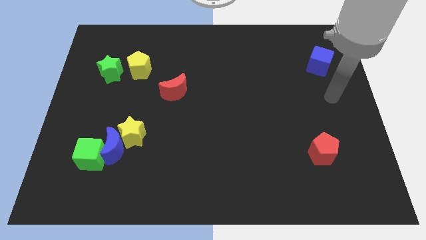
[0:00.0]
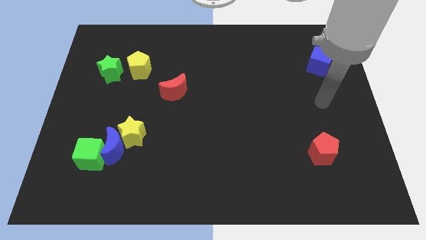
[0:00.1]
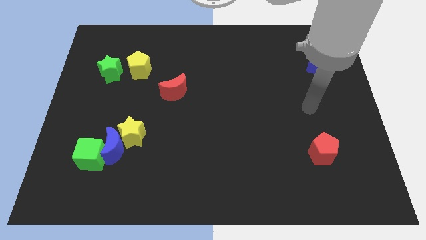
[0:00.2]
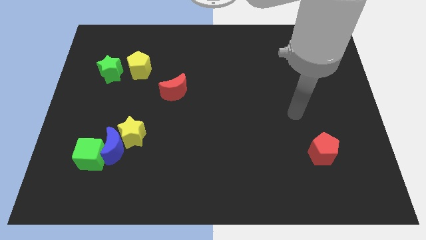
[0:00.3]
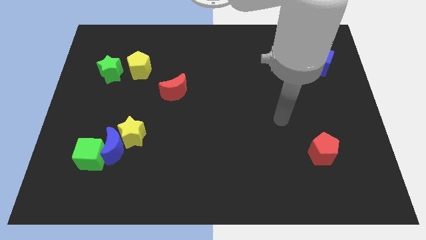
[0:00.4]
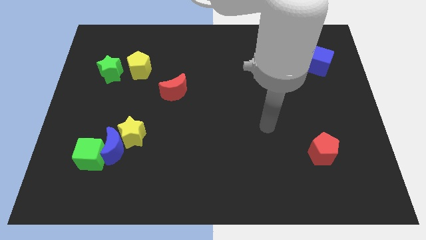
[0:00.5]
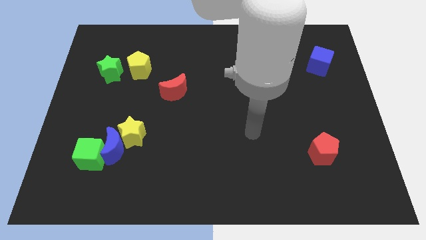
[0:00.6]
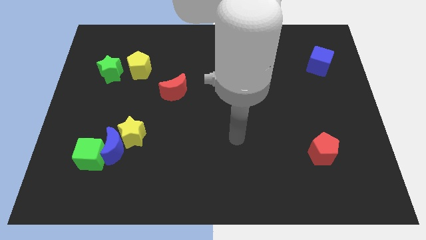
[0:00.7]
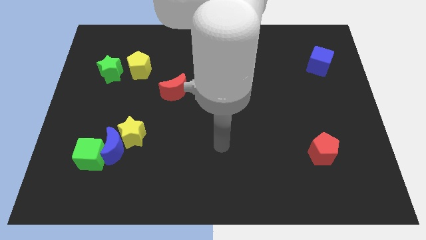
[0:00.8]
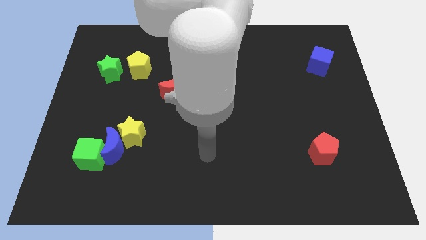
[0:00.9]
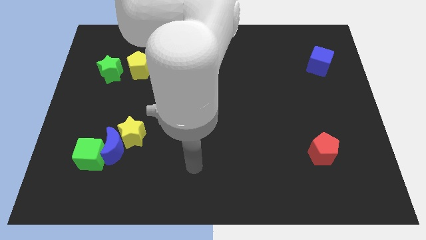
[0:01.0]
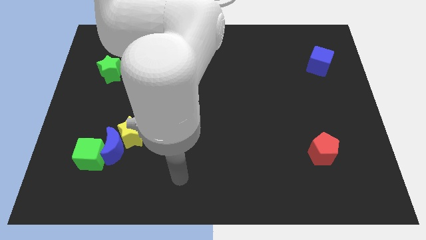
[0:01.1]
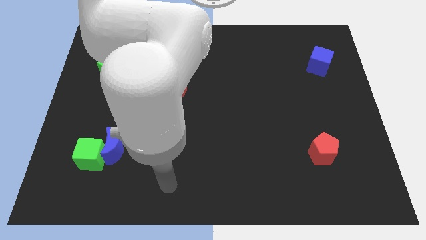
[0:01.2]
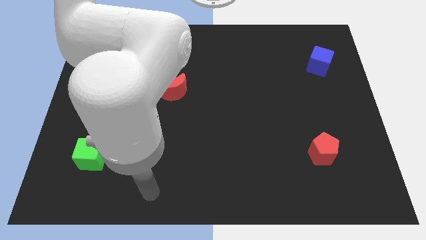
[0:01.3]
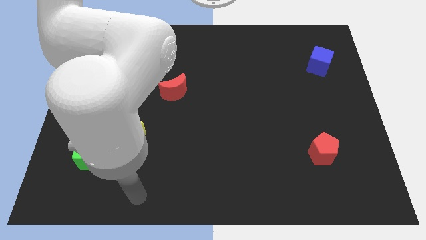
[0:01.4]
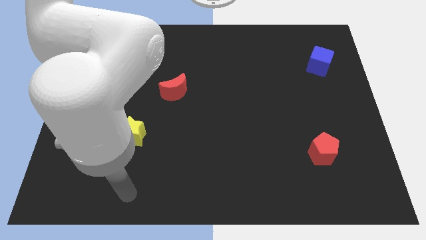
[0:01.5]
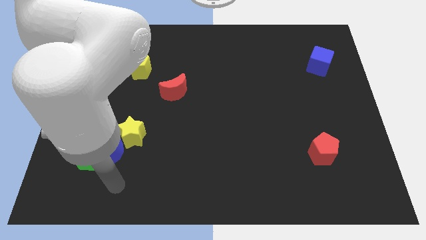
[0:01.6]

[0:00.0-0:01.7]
place your hand below the blue crescent

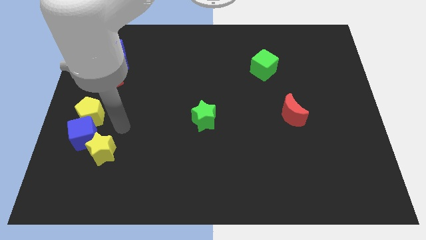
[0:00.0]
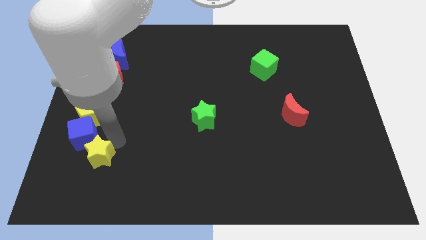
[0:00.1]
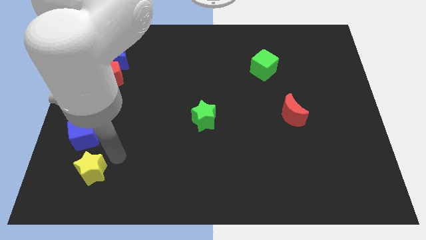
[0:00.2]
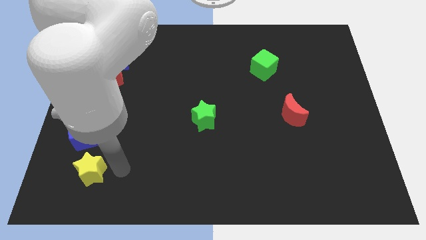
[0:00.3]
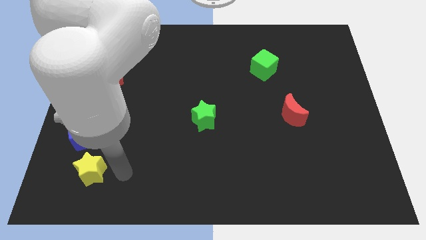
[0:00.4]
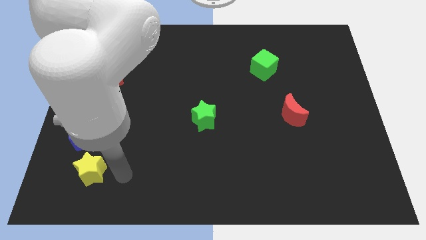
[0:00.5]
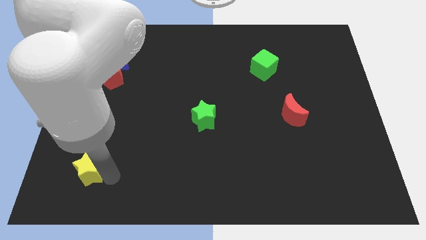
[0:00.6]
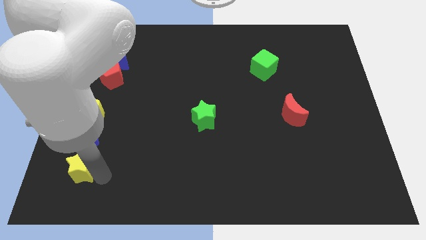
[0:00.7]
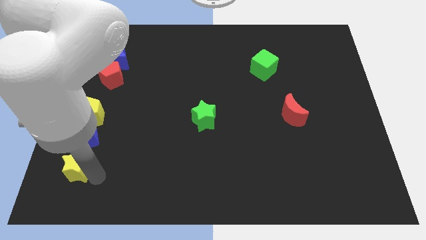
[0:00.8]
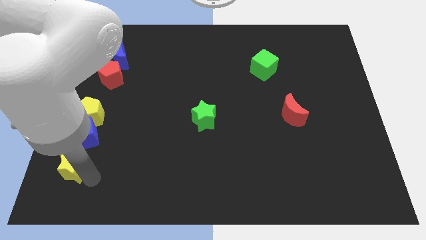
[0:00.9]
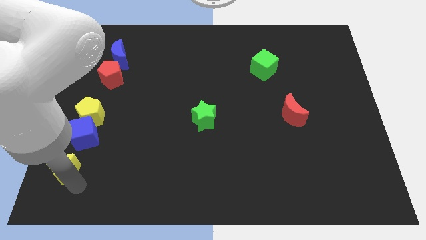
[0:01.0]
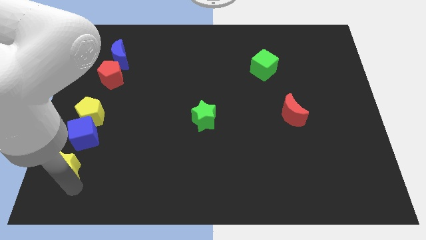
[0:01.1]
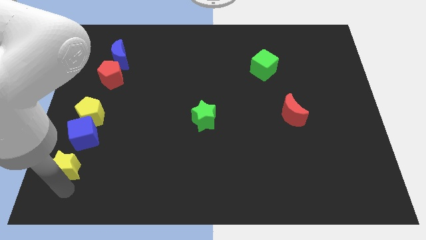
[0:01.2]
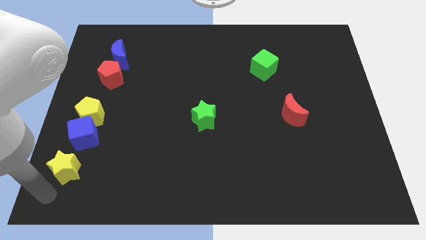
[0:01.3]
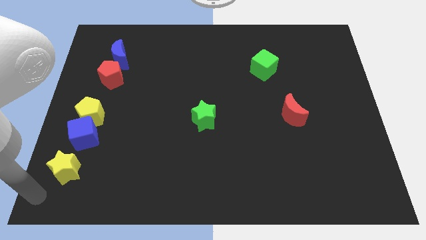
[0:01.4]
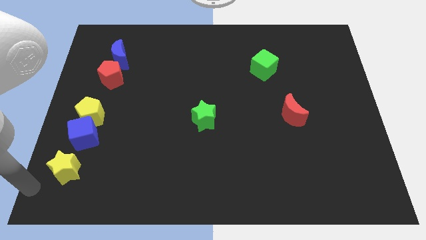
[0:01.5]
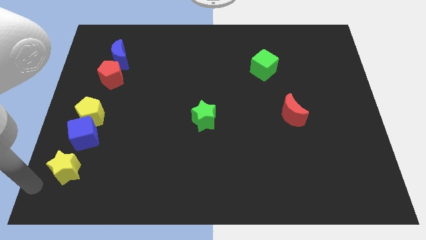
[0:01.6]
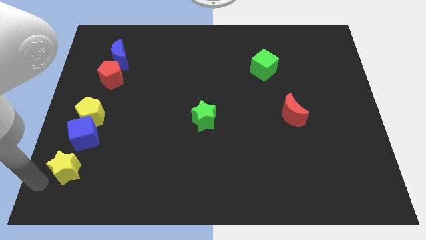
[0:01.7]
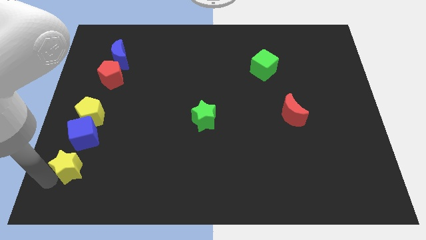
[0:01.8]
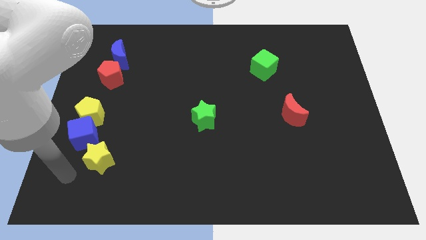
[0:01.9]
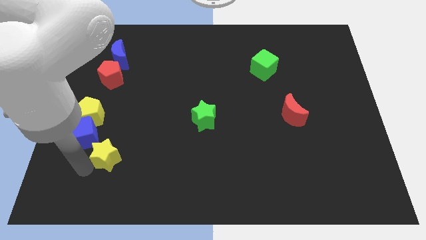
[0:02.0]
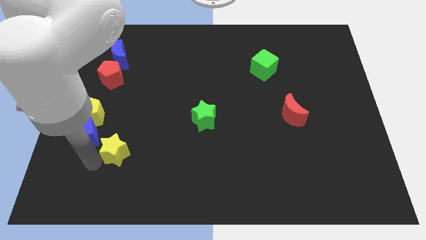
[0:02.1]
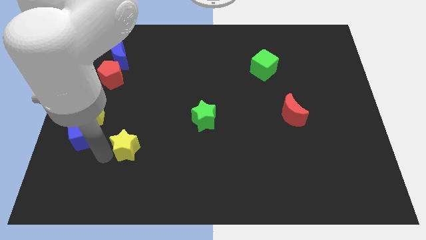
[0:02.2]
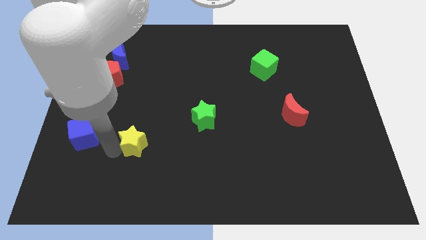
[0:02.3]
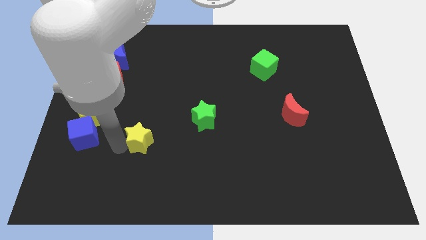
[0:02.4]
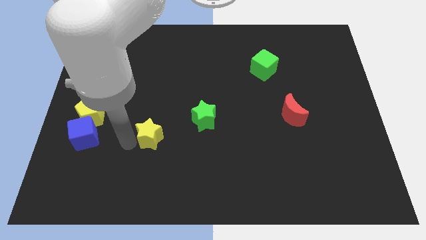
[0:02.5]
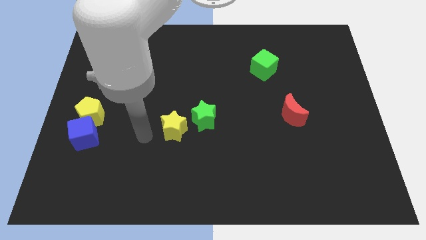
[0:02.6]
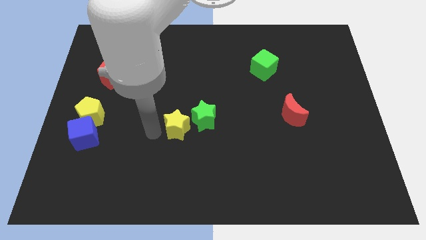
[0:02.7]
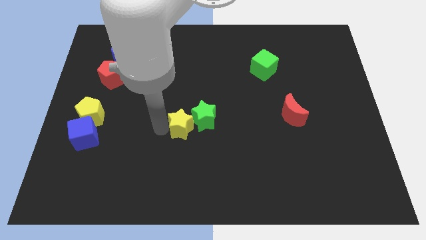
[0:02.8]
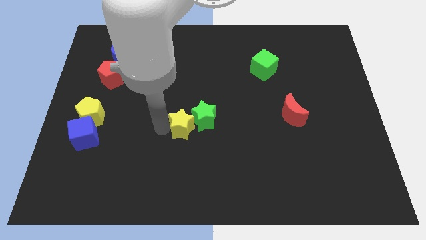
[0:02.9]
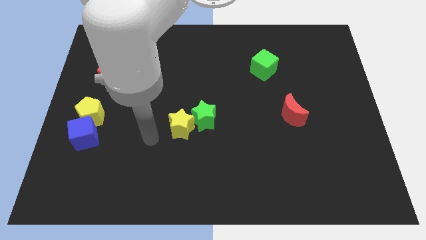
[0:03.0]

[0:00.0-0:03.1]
push yellow star beside green star

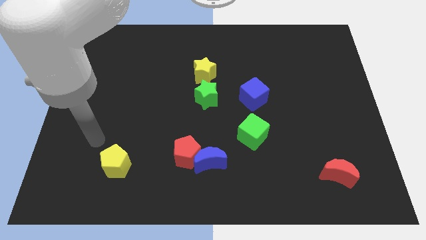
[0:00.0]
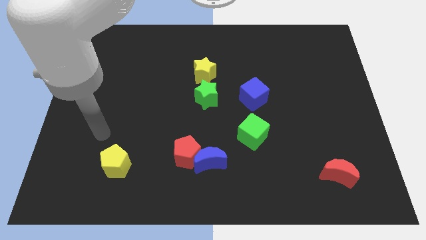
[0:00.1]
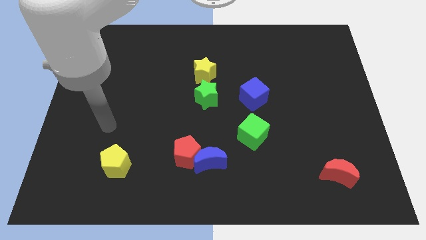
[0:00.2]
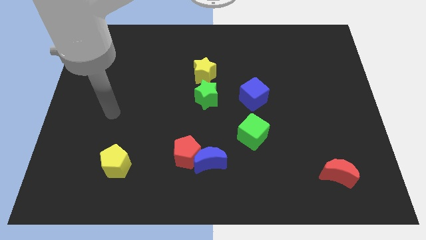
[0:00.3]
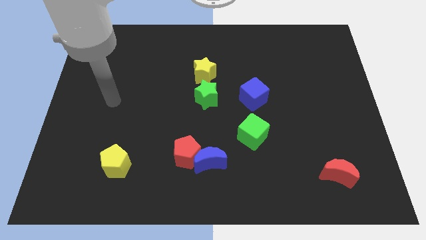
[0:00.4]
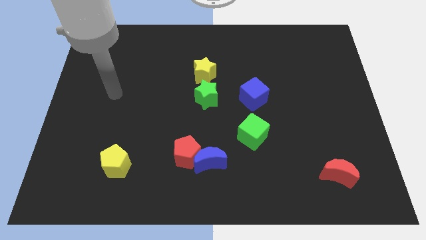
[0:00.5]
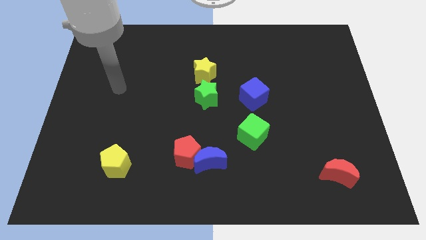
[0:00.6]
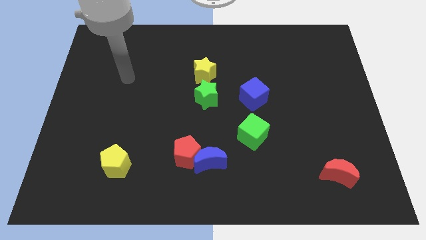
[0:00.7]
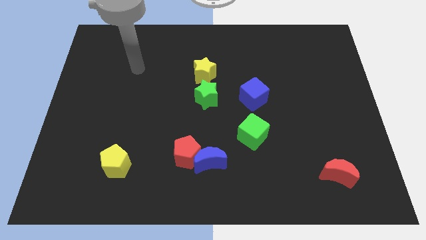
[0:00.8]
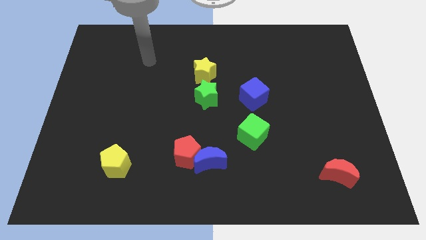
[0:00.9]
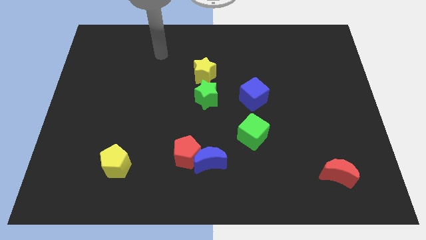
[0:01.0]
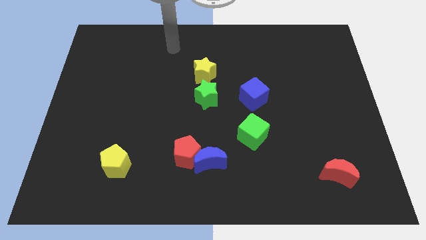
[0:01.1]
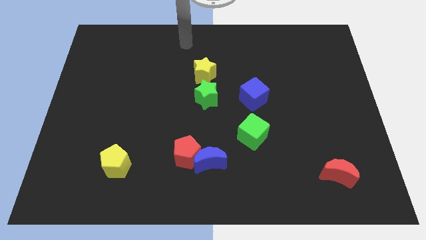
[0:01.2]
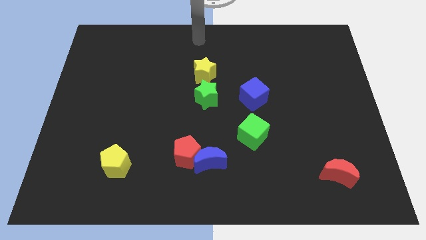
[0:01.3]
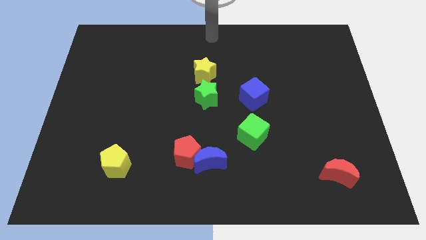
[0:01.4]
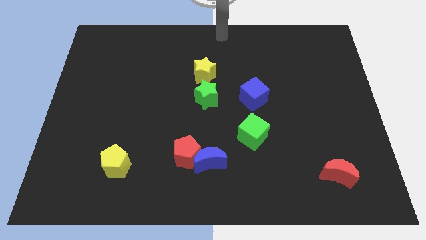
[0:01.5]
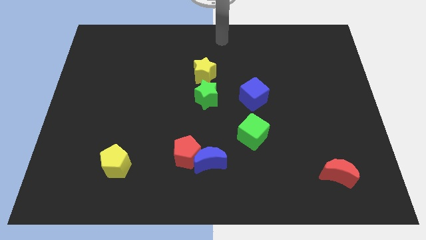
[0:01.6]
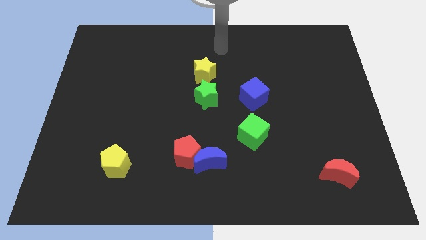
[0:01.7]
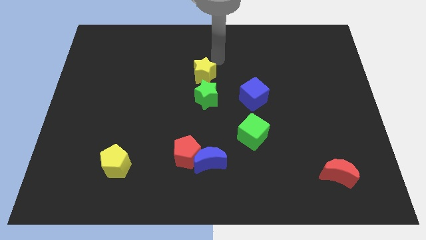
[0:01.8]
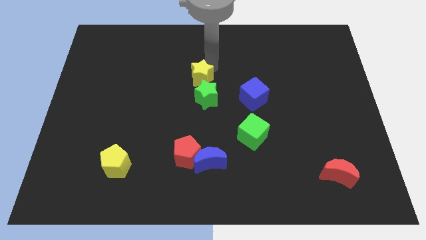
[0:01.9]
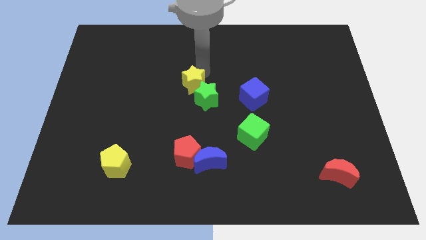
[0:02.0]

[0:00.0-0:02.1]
move your arm towards the top of the yellow star

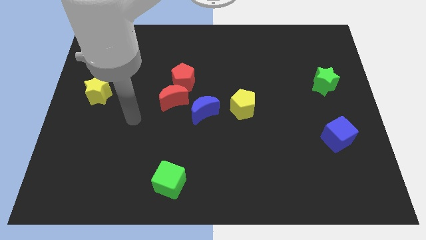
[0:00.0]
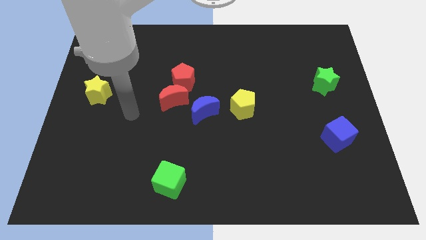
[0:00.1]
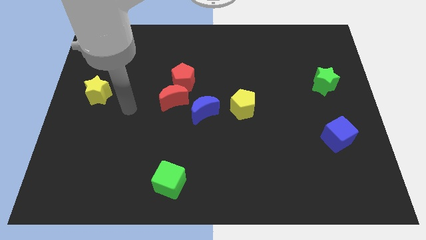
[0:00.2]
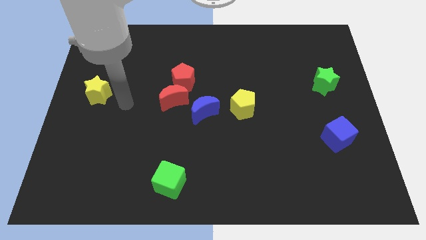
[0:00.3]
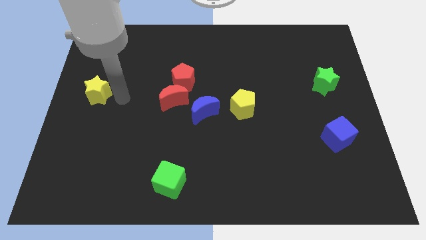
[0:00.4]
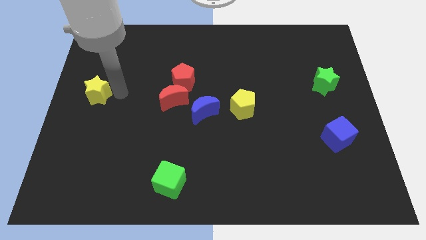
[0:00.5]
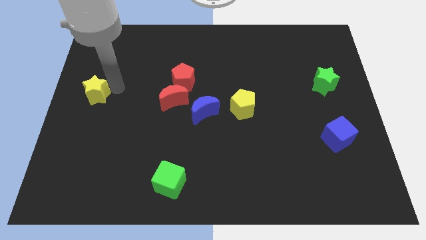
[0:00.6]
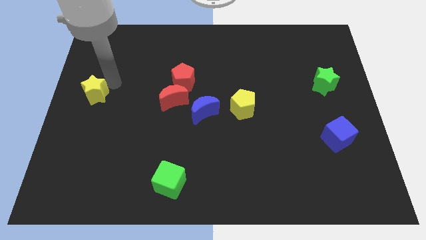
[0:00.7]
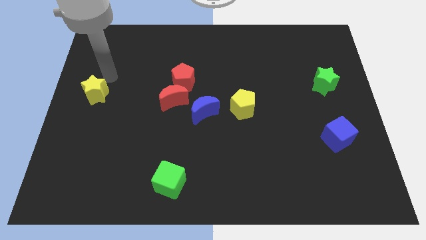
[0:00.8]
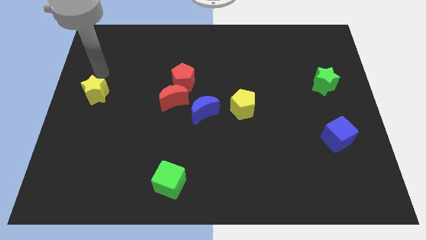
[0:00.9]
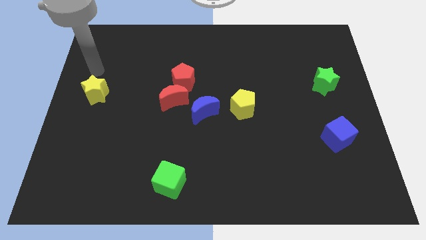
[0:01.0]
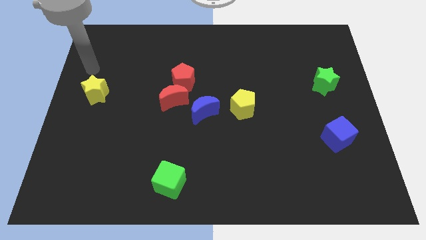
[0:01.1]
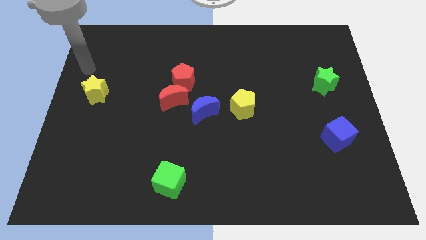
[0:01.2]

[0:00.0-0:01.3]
move your arm to the top of the yellow star

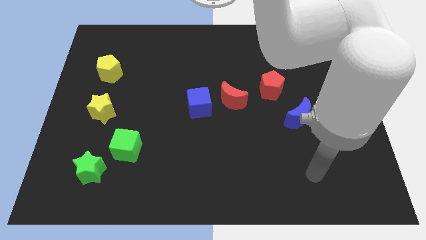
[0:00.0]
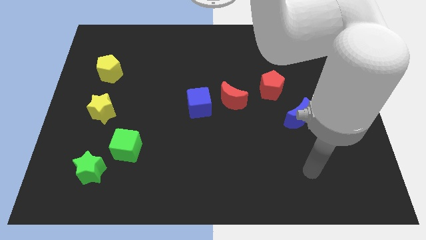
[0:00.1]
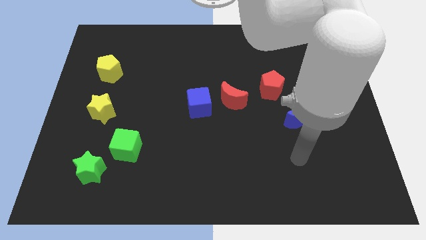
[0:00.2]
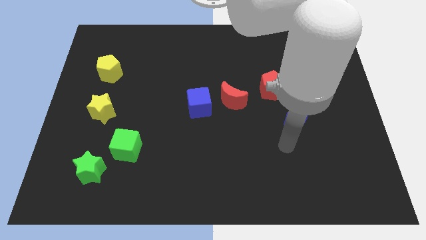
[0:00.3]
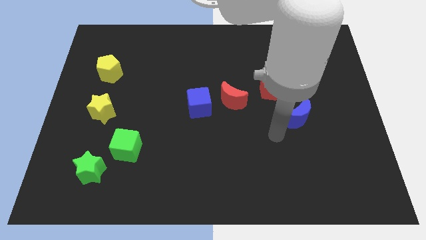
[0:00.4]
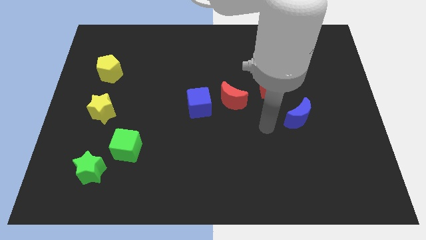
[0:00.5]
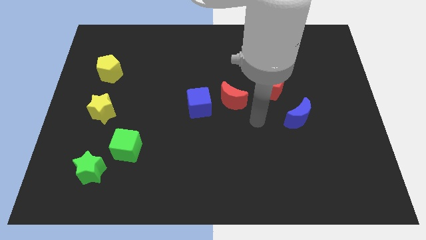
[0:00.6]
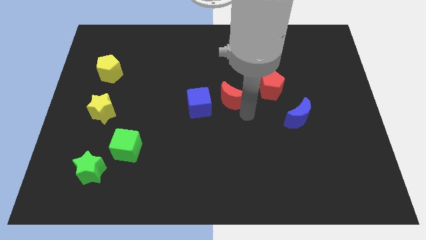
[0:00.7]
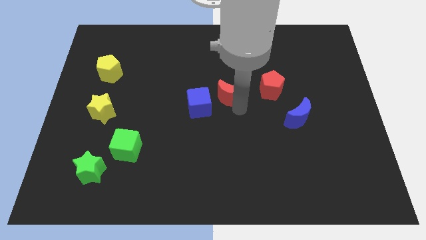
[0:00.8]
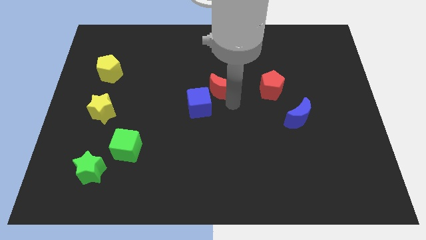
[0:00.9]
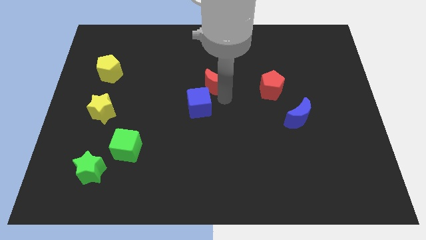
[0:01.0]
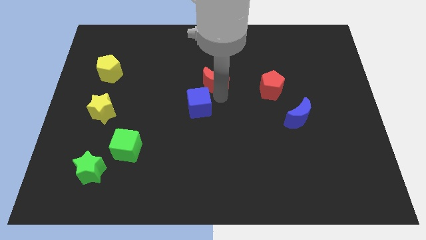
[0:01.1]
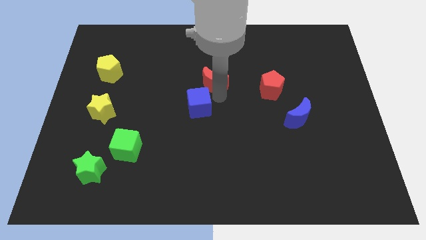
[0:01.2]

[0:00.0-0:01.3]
push the red crescent to the top right of the blue cube
